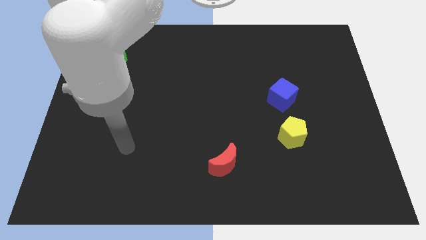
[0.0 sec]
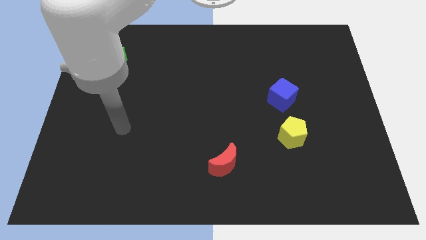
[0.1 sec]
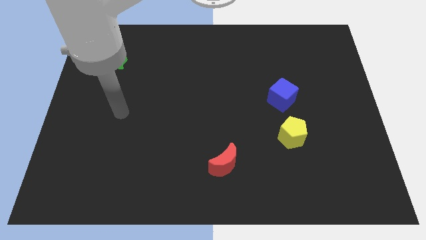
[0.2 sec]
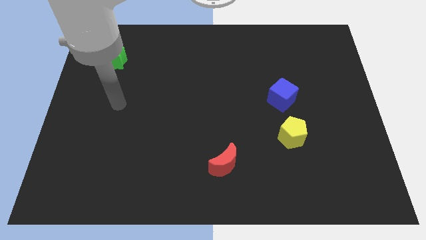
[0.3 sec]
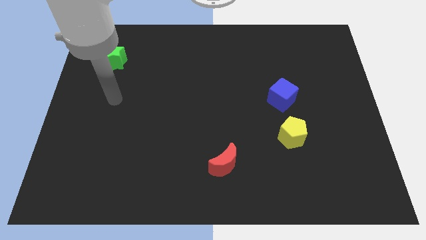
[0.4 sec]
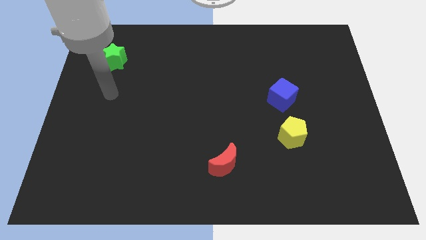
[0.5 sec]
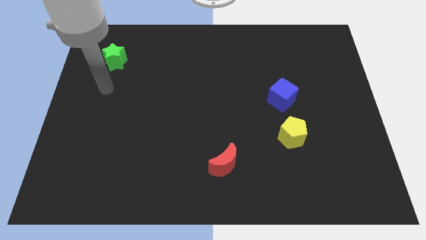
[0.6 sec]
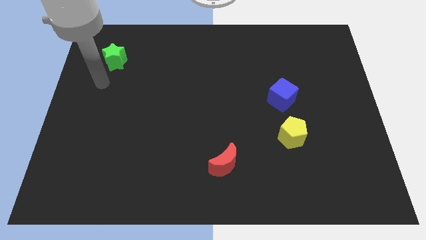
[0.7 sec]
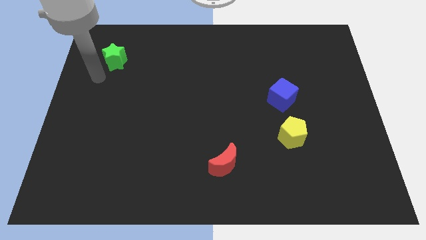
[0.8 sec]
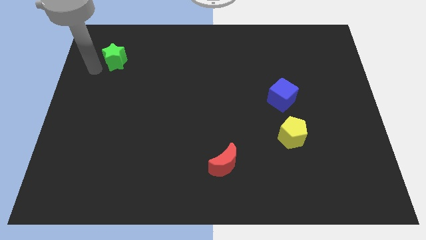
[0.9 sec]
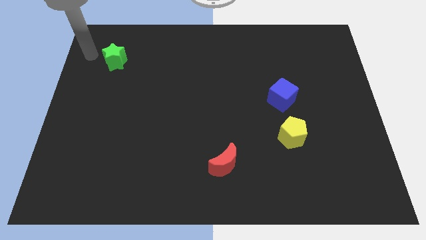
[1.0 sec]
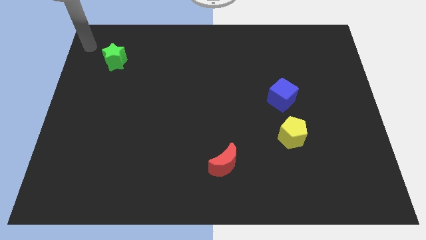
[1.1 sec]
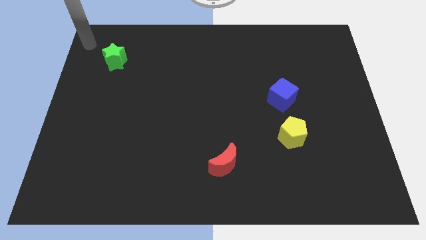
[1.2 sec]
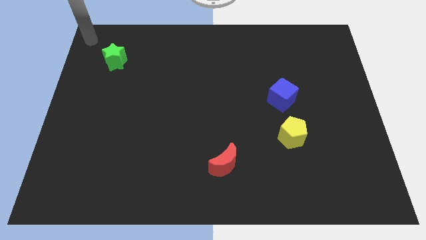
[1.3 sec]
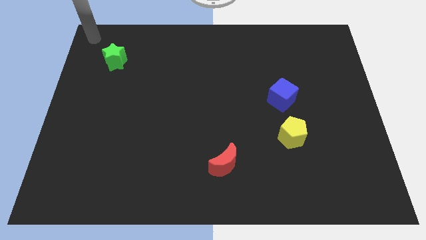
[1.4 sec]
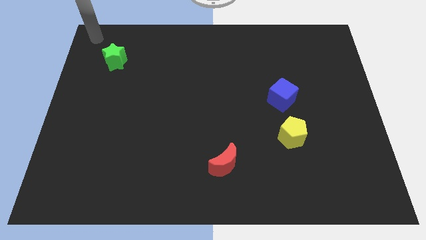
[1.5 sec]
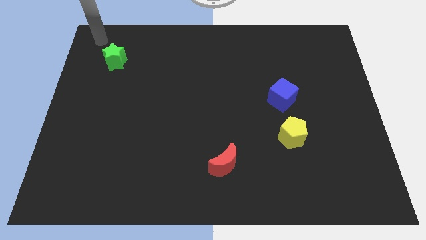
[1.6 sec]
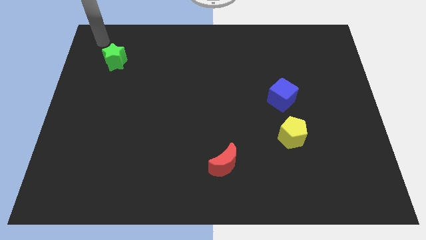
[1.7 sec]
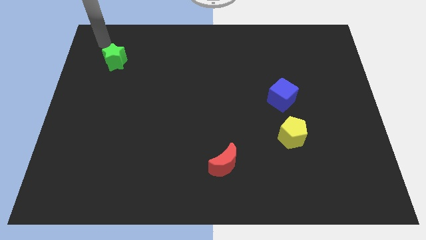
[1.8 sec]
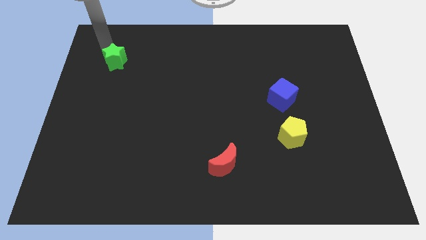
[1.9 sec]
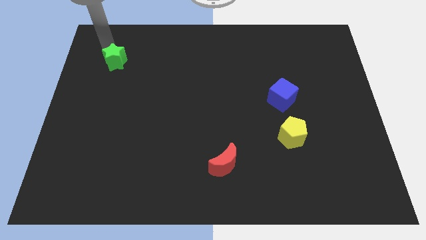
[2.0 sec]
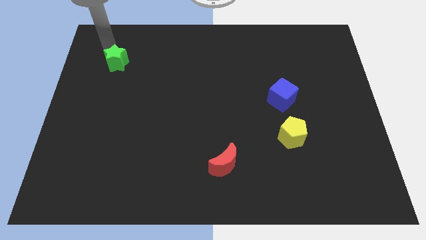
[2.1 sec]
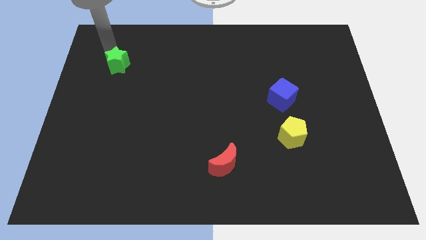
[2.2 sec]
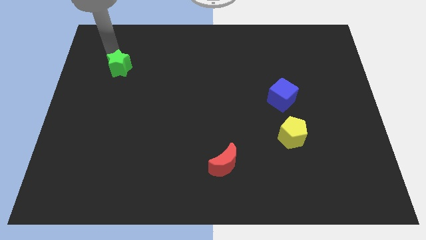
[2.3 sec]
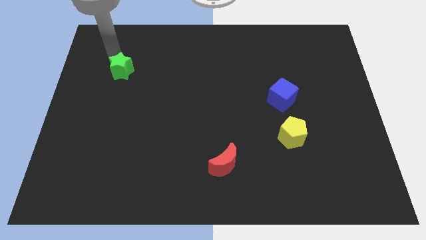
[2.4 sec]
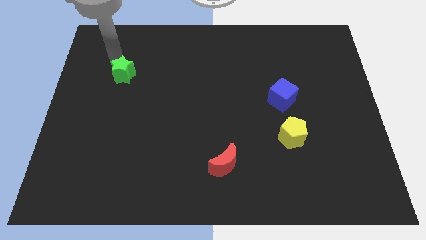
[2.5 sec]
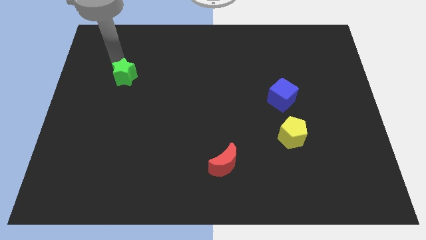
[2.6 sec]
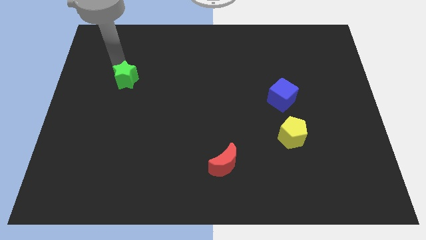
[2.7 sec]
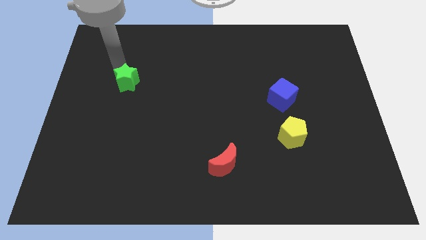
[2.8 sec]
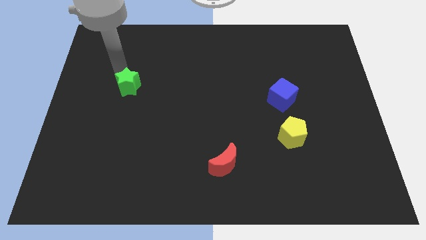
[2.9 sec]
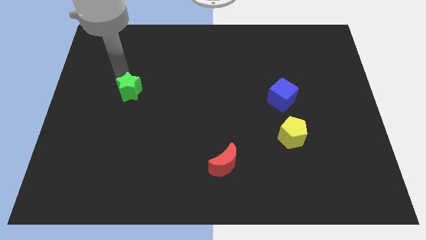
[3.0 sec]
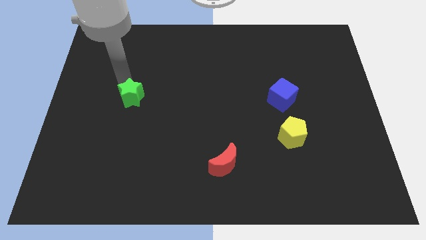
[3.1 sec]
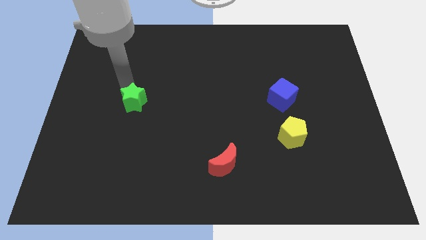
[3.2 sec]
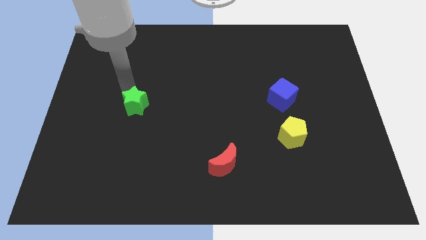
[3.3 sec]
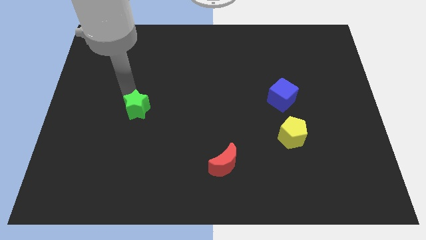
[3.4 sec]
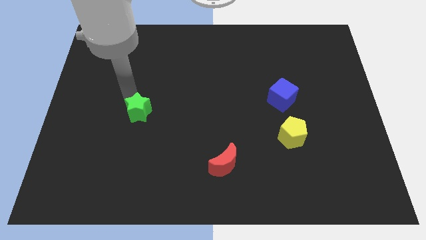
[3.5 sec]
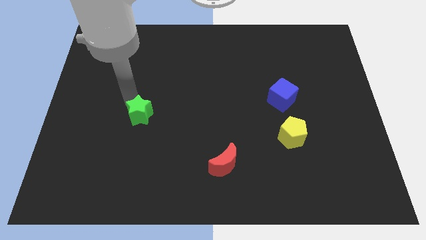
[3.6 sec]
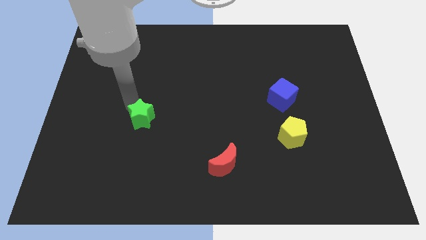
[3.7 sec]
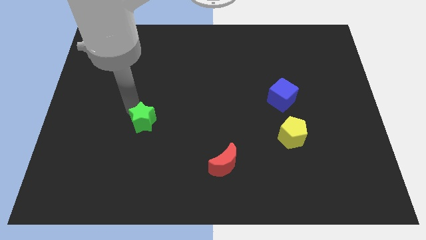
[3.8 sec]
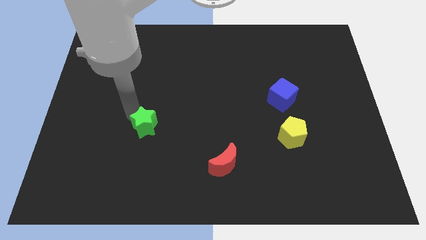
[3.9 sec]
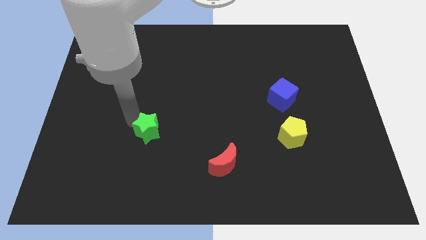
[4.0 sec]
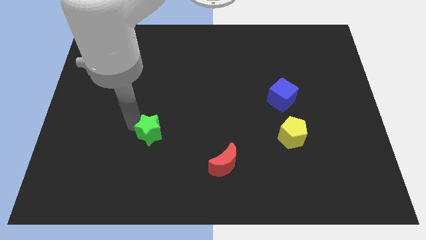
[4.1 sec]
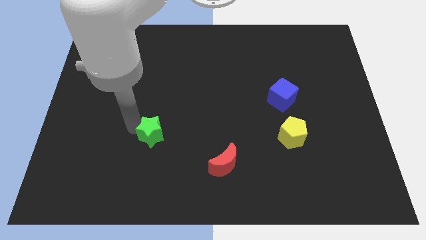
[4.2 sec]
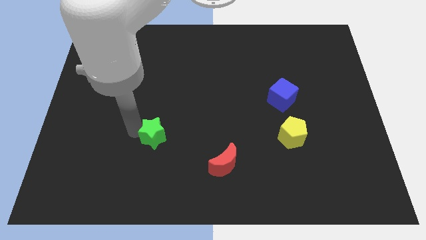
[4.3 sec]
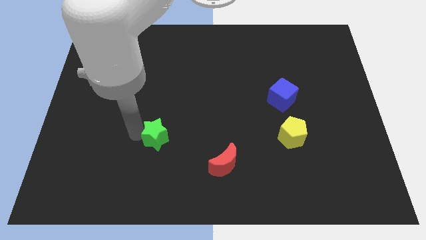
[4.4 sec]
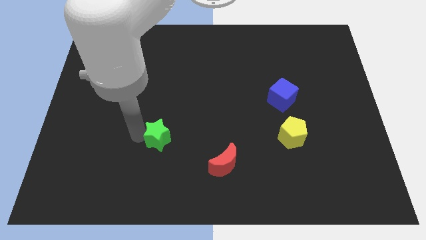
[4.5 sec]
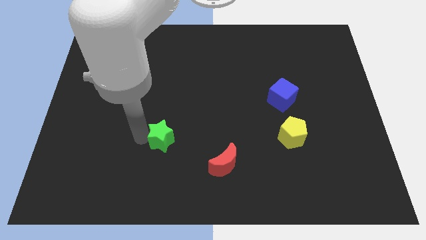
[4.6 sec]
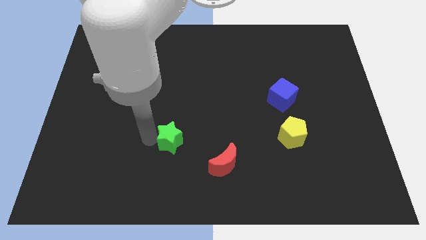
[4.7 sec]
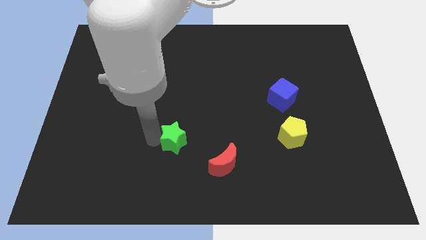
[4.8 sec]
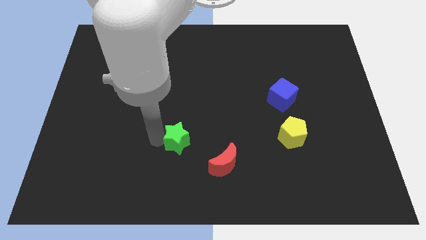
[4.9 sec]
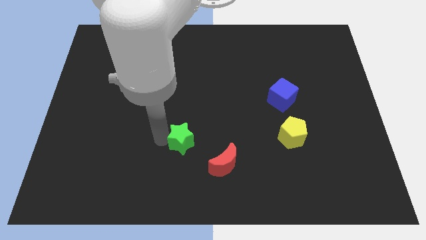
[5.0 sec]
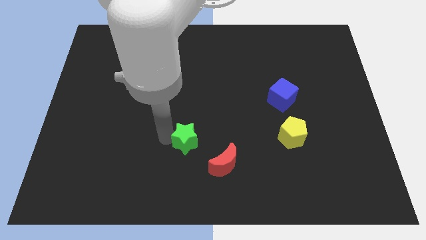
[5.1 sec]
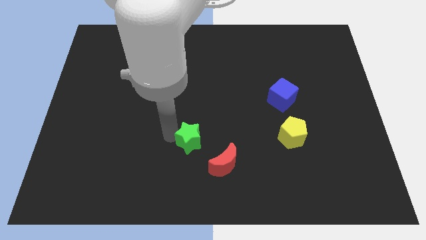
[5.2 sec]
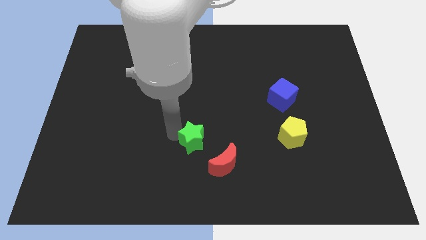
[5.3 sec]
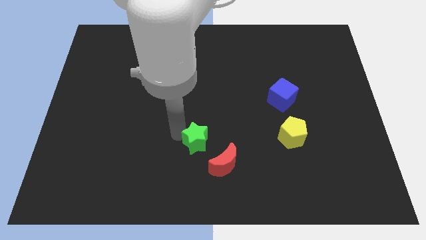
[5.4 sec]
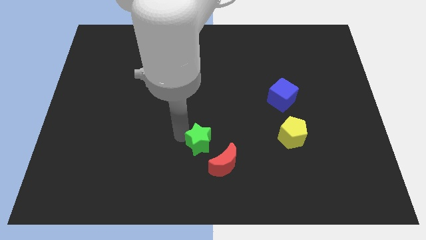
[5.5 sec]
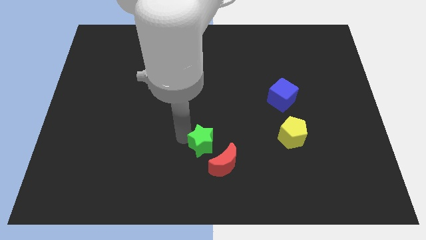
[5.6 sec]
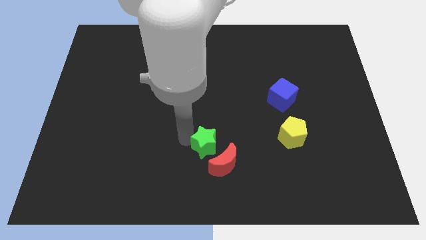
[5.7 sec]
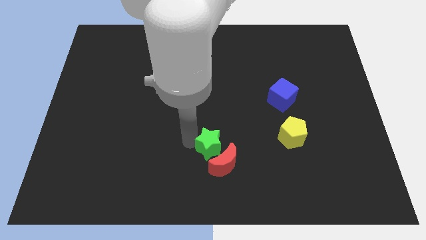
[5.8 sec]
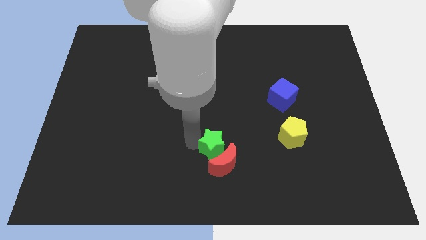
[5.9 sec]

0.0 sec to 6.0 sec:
put the green block to the red block

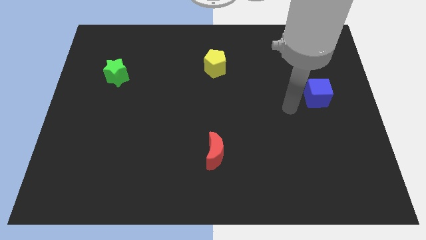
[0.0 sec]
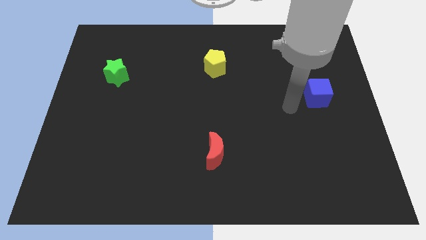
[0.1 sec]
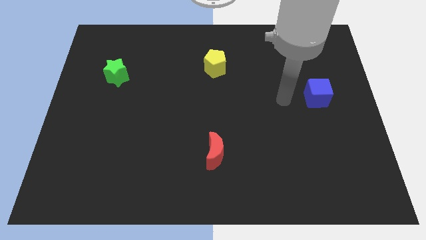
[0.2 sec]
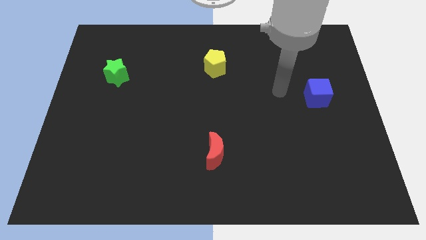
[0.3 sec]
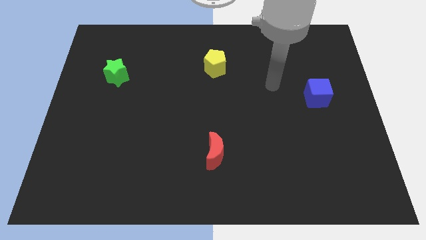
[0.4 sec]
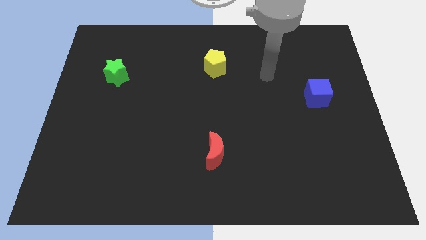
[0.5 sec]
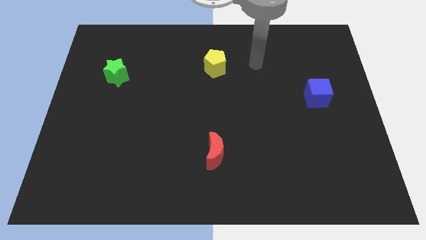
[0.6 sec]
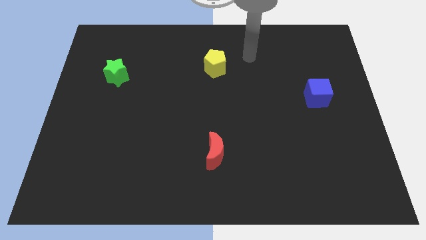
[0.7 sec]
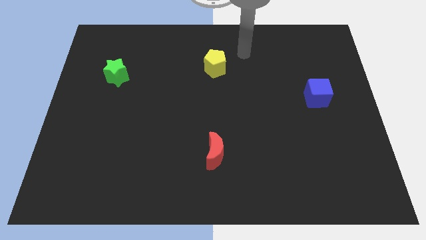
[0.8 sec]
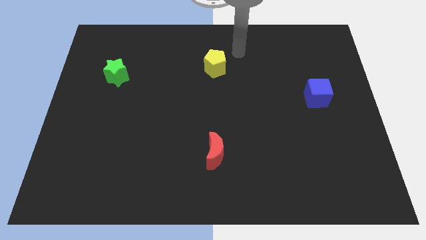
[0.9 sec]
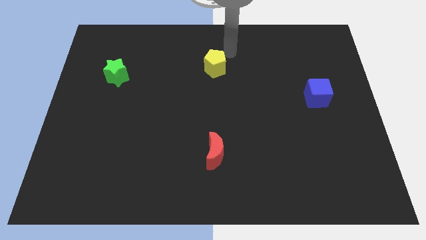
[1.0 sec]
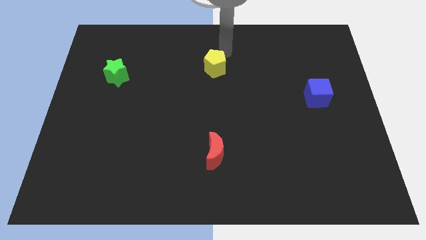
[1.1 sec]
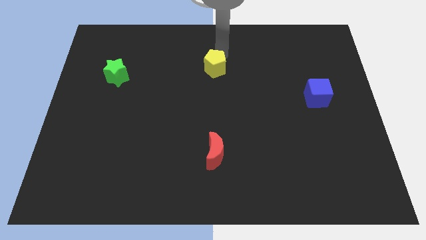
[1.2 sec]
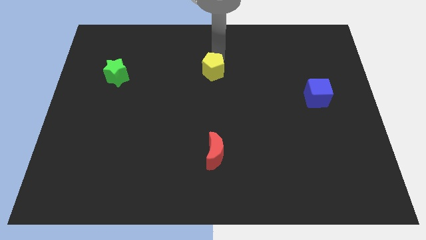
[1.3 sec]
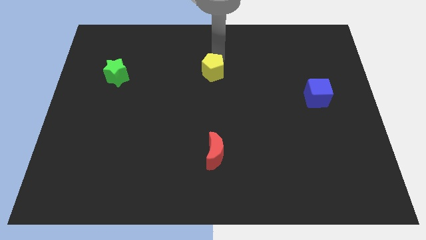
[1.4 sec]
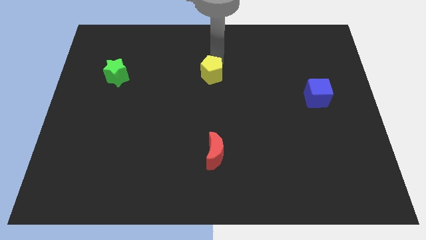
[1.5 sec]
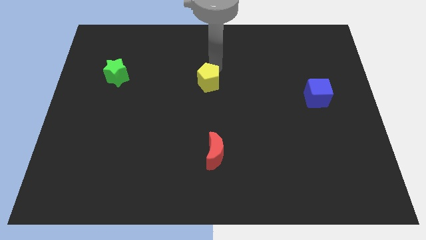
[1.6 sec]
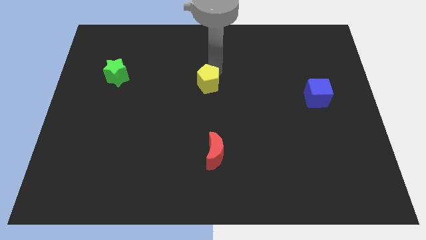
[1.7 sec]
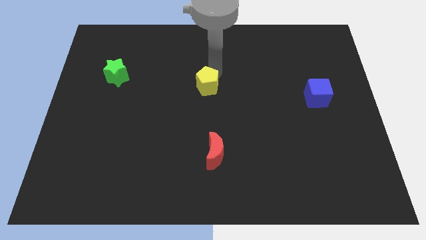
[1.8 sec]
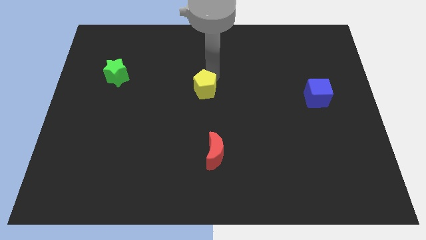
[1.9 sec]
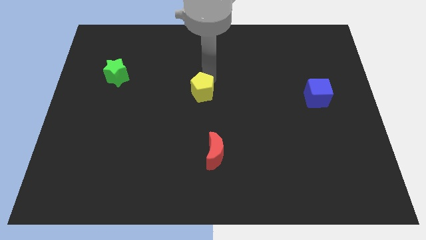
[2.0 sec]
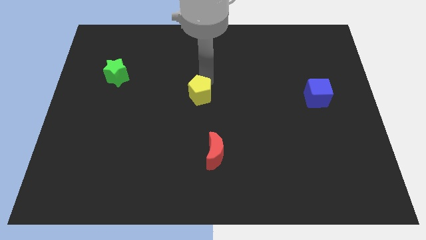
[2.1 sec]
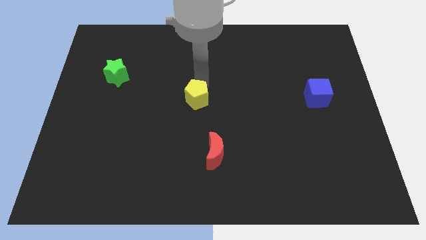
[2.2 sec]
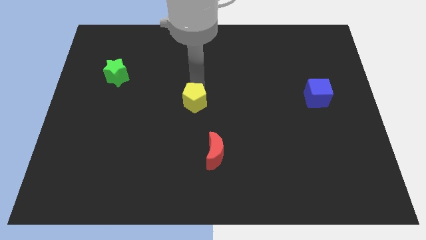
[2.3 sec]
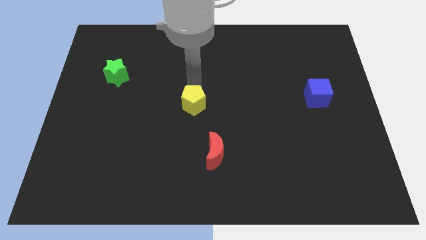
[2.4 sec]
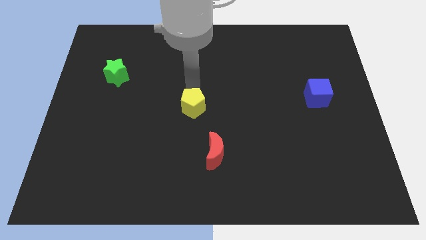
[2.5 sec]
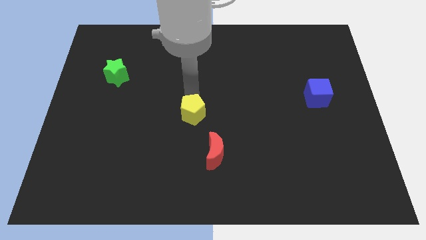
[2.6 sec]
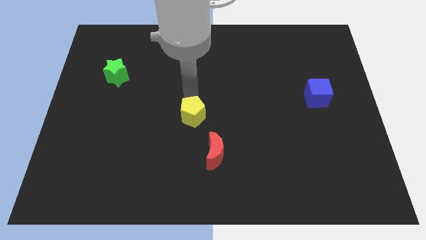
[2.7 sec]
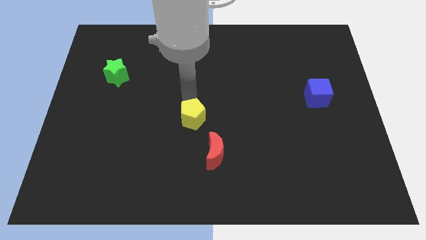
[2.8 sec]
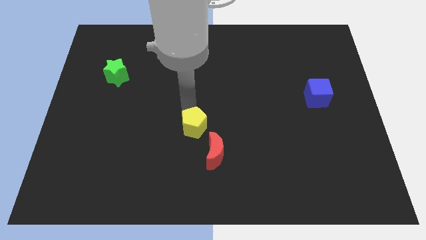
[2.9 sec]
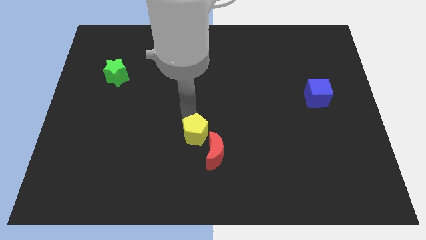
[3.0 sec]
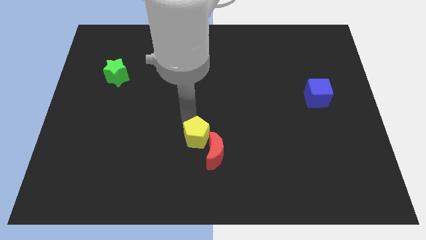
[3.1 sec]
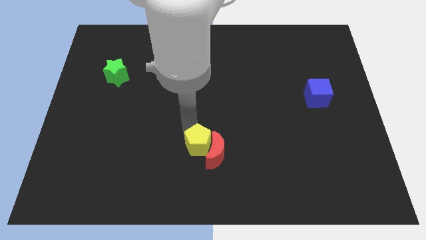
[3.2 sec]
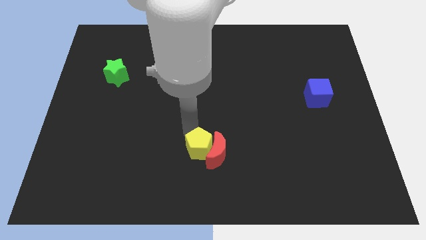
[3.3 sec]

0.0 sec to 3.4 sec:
slide the pentagon next to the moon
